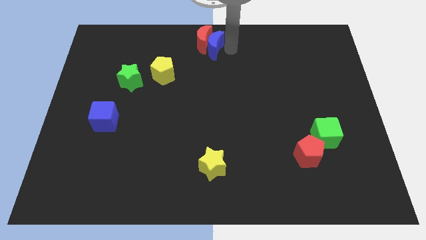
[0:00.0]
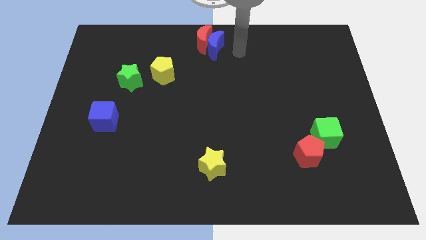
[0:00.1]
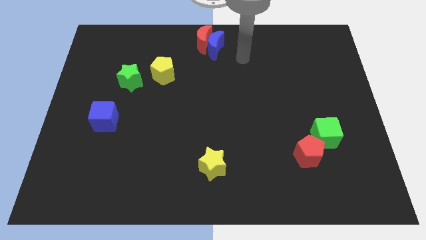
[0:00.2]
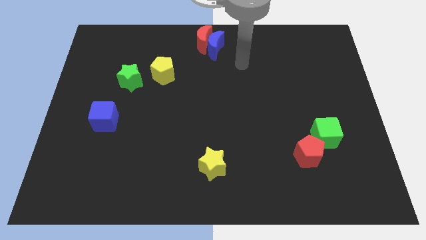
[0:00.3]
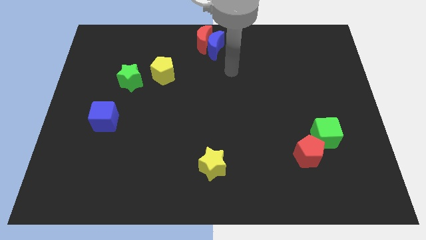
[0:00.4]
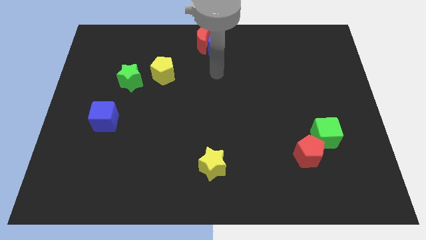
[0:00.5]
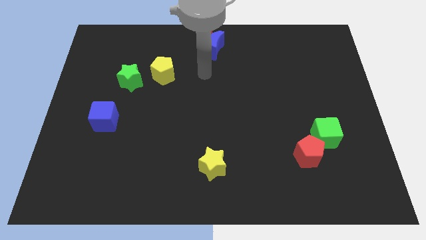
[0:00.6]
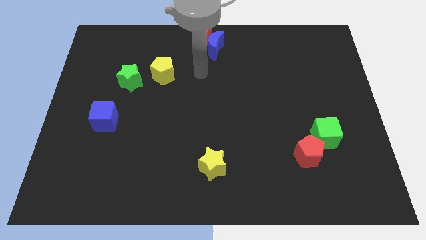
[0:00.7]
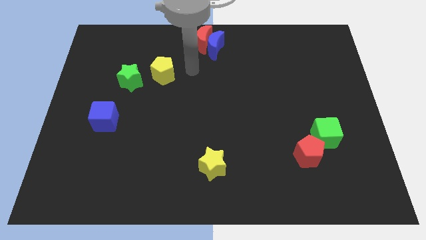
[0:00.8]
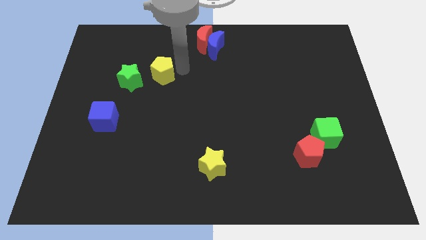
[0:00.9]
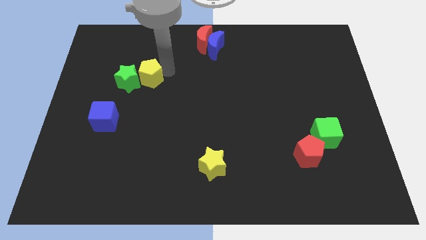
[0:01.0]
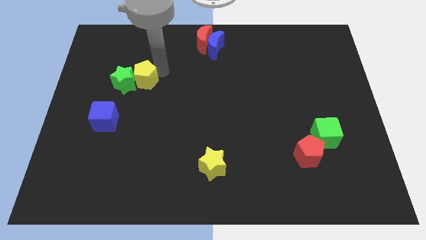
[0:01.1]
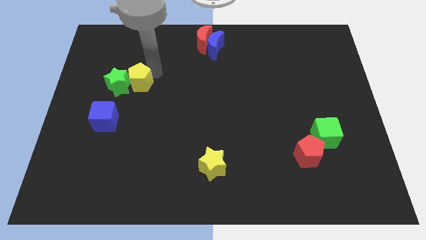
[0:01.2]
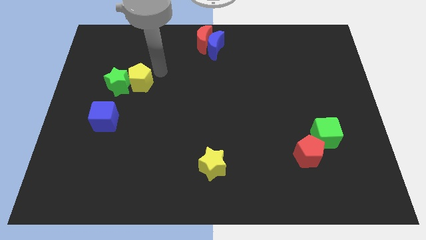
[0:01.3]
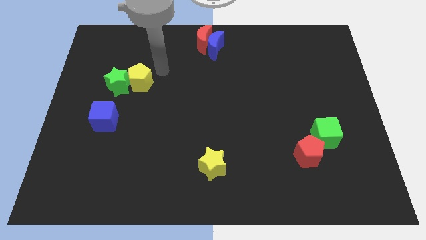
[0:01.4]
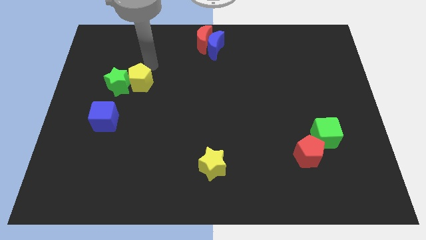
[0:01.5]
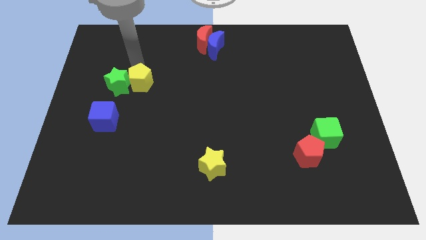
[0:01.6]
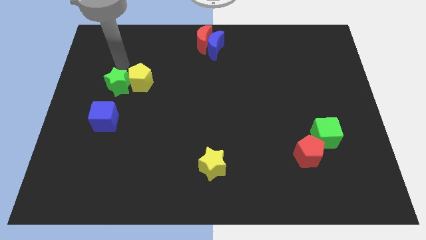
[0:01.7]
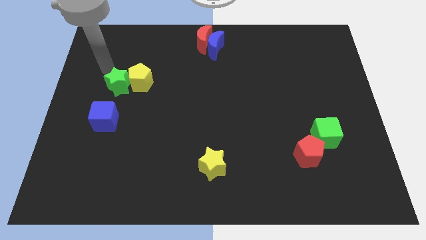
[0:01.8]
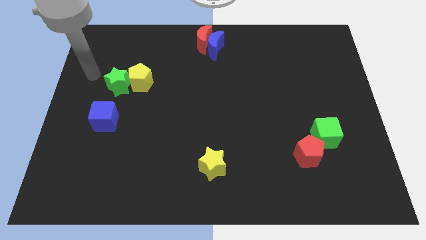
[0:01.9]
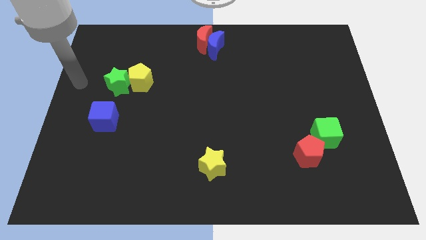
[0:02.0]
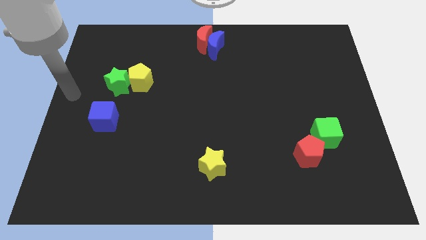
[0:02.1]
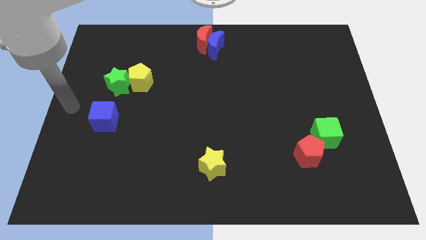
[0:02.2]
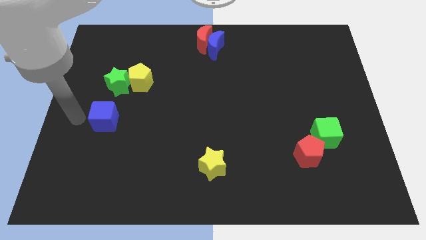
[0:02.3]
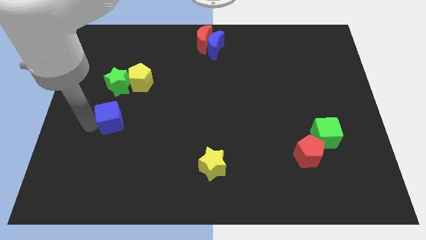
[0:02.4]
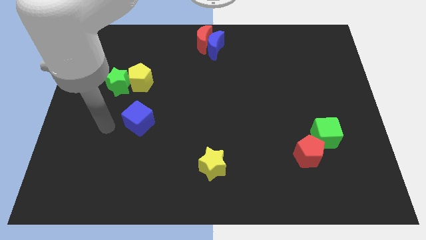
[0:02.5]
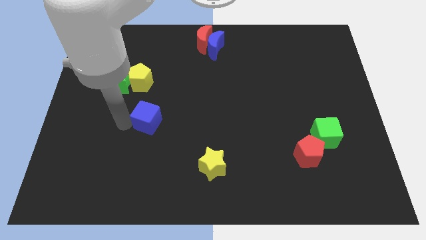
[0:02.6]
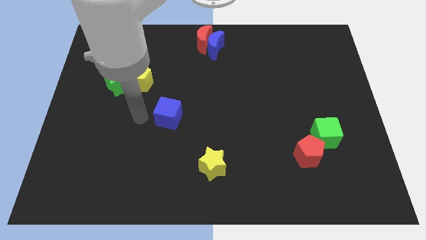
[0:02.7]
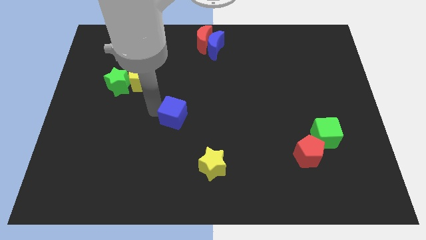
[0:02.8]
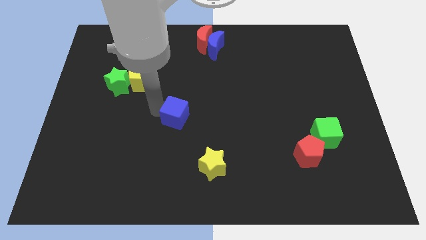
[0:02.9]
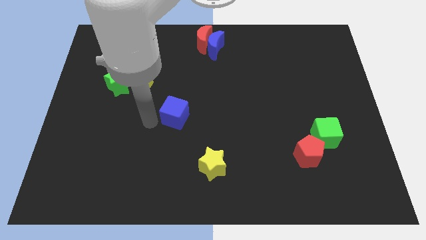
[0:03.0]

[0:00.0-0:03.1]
push the blue cube diagonally to the bottom right of the yellow pentagon

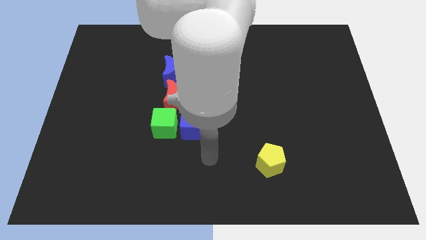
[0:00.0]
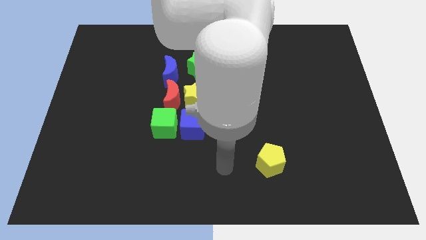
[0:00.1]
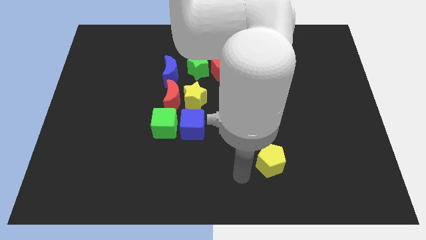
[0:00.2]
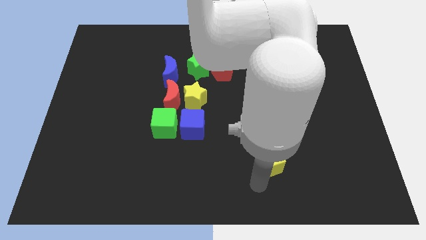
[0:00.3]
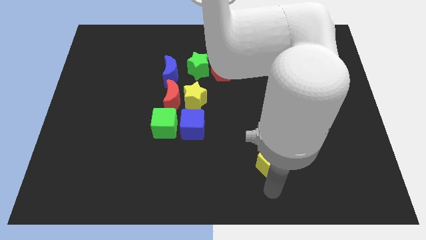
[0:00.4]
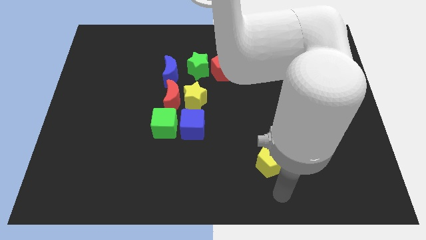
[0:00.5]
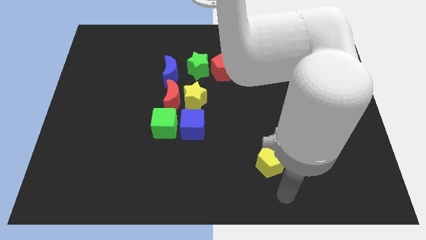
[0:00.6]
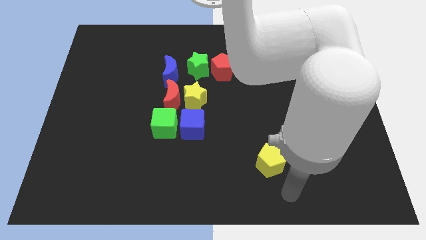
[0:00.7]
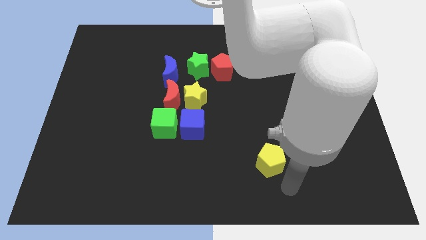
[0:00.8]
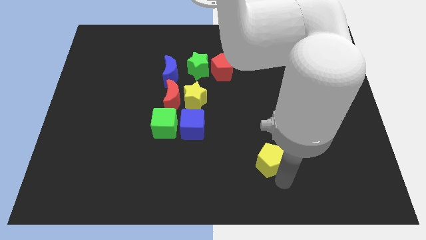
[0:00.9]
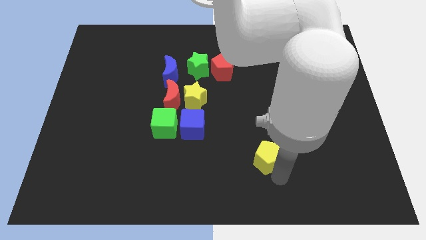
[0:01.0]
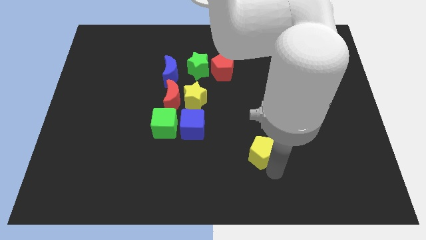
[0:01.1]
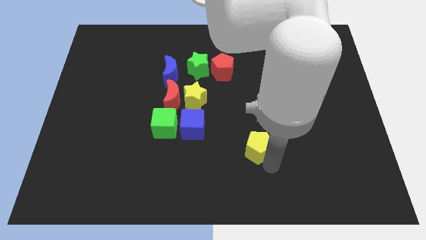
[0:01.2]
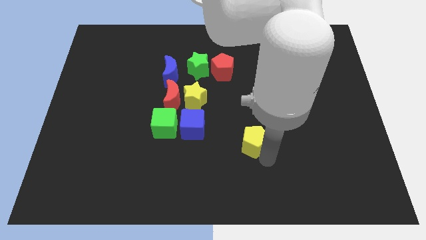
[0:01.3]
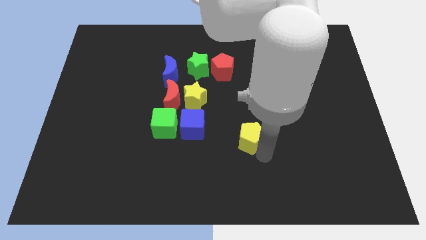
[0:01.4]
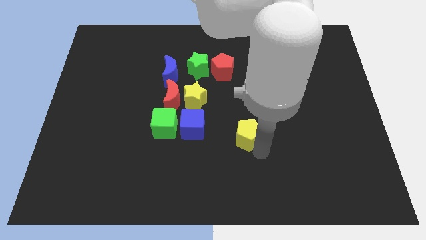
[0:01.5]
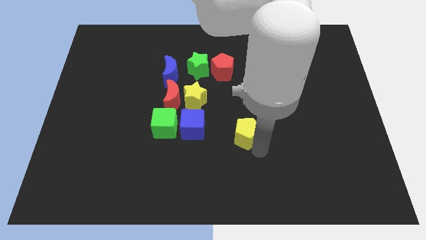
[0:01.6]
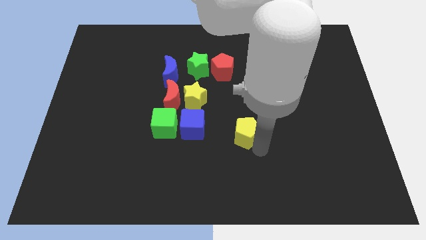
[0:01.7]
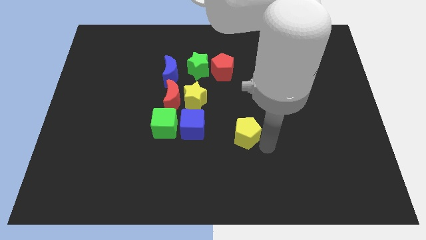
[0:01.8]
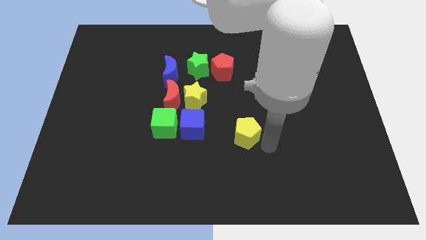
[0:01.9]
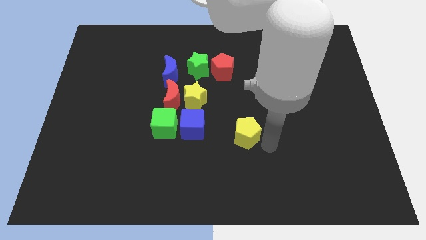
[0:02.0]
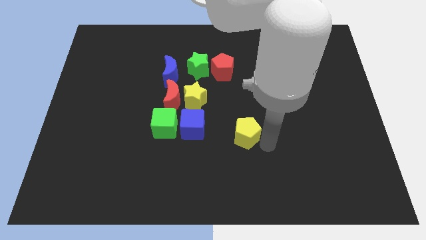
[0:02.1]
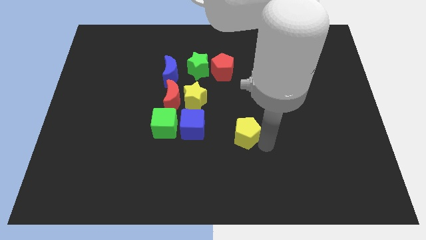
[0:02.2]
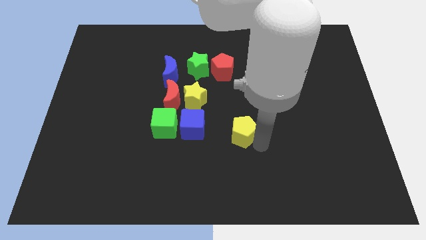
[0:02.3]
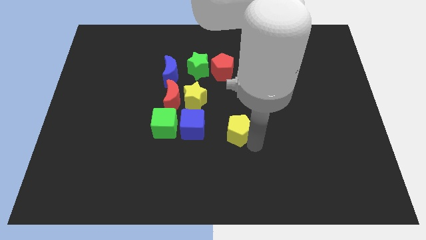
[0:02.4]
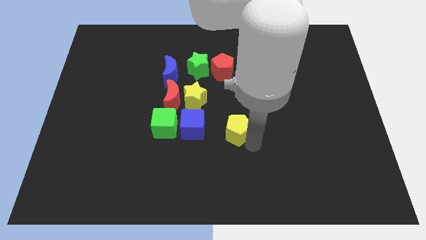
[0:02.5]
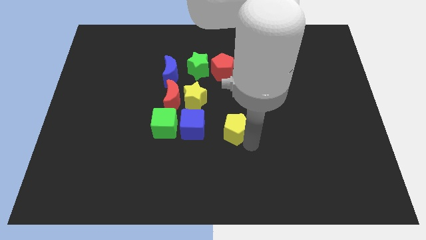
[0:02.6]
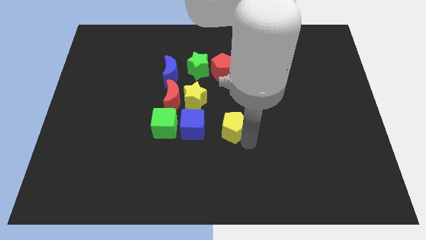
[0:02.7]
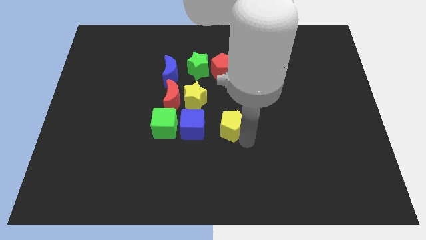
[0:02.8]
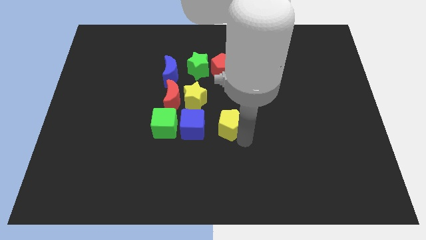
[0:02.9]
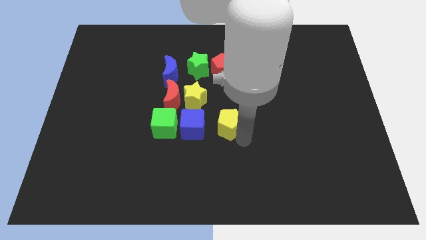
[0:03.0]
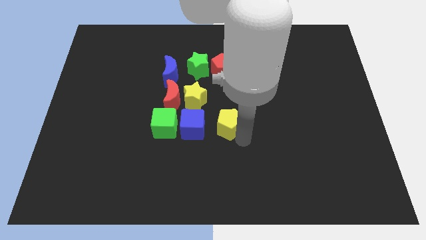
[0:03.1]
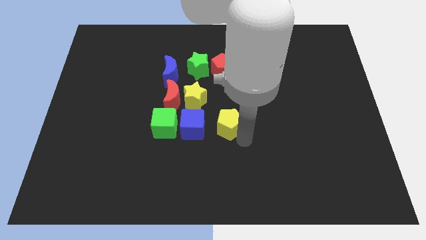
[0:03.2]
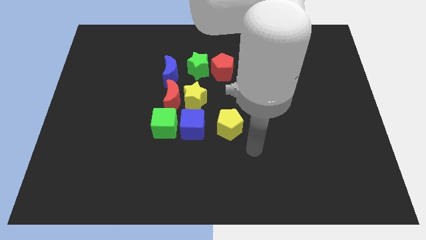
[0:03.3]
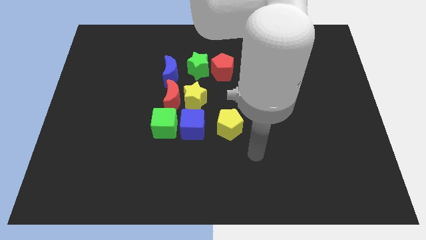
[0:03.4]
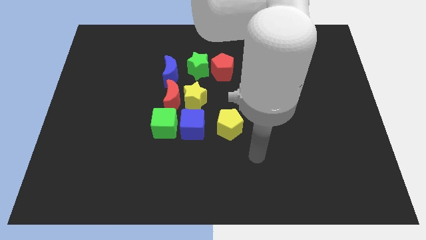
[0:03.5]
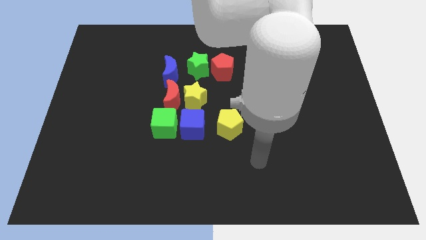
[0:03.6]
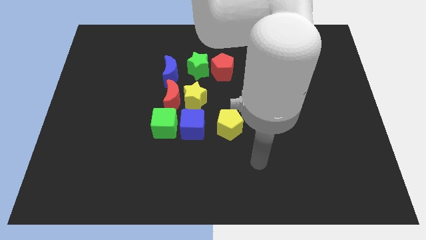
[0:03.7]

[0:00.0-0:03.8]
push the yellow pentagon to the right side of the blue cube

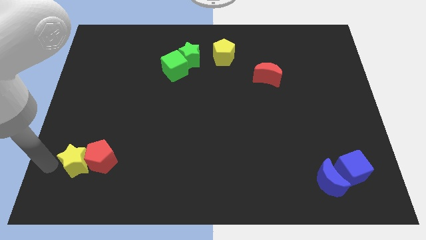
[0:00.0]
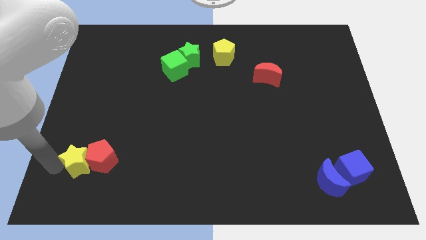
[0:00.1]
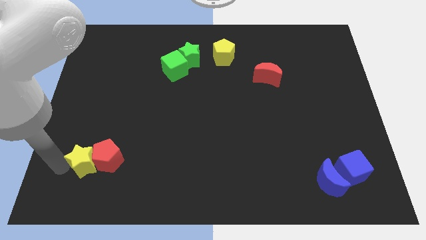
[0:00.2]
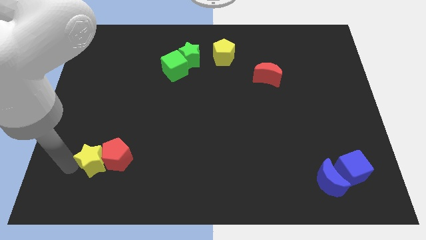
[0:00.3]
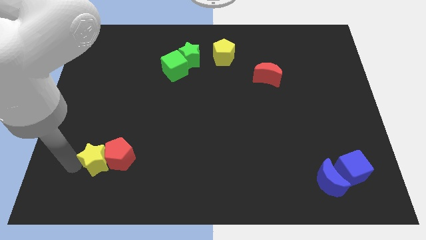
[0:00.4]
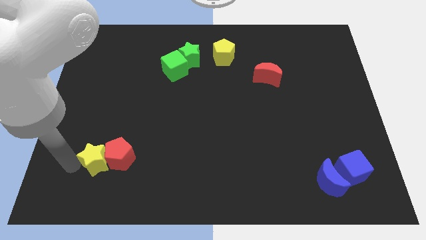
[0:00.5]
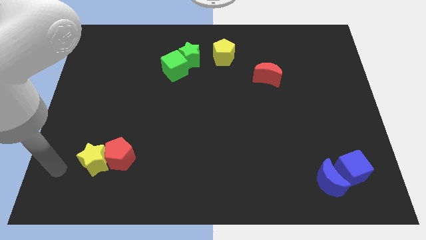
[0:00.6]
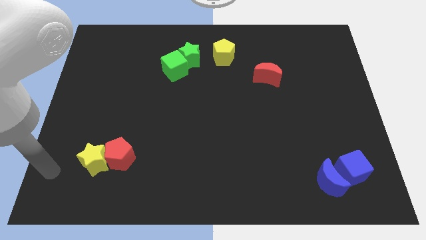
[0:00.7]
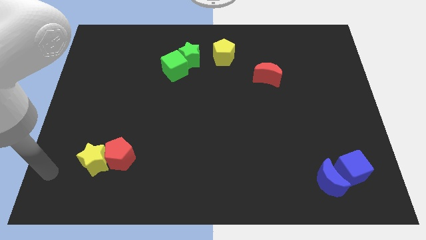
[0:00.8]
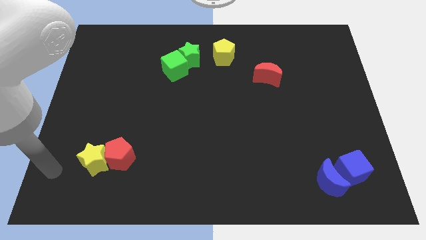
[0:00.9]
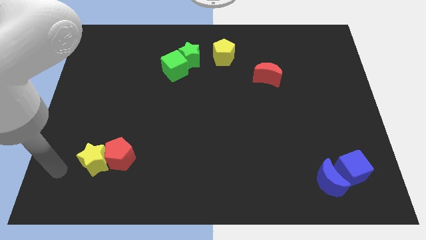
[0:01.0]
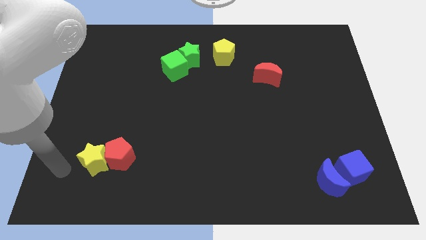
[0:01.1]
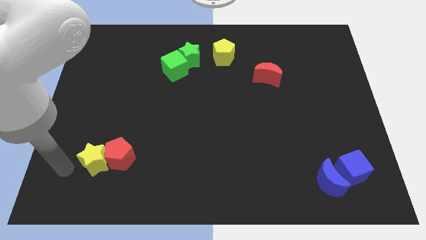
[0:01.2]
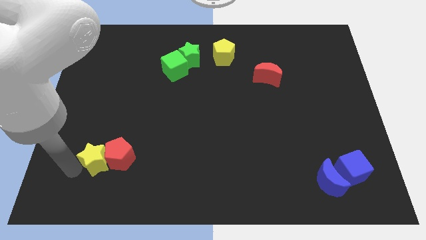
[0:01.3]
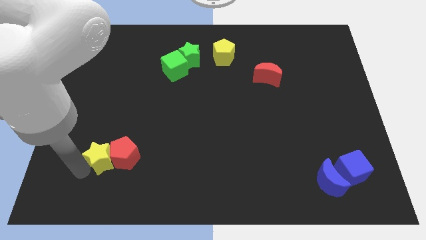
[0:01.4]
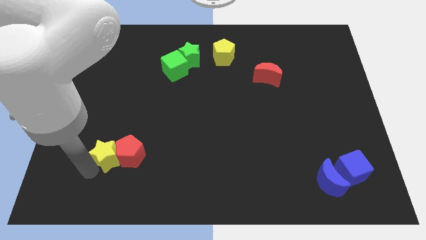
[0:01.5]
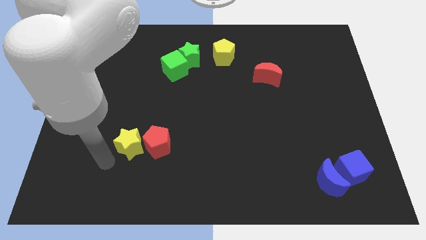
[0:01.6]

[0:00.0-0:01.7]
push teh yellow star and red pentagon towards right

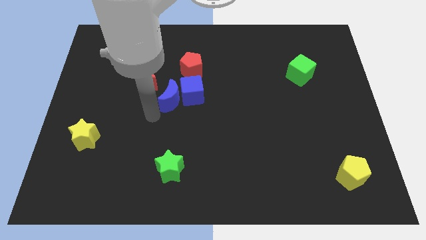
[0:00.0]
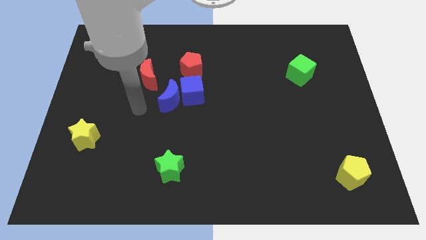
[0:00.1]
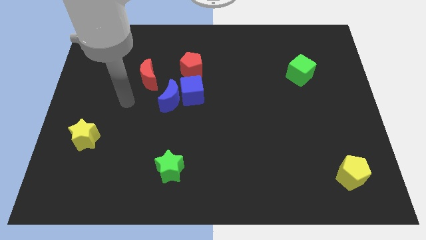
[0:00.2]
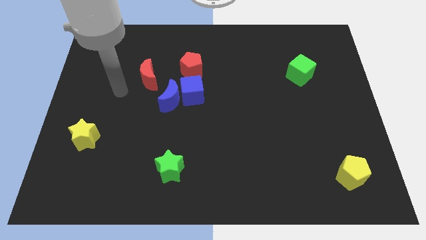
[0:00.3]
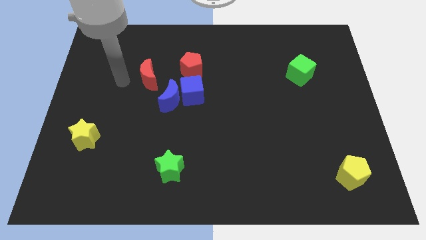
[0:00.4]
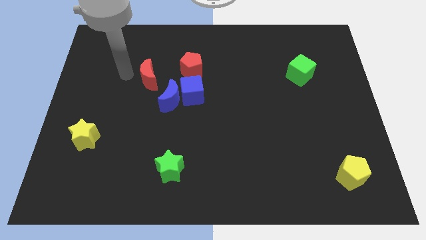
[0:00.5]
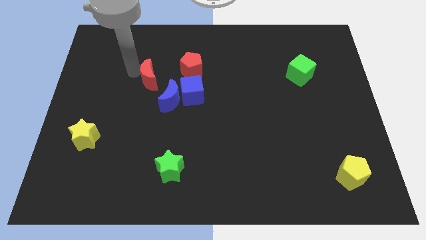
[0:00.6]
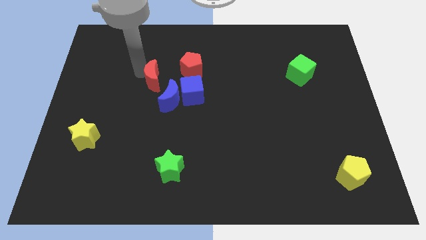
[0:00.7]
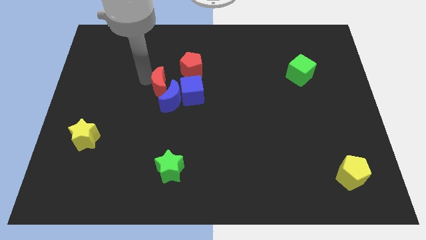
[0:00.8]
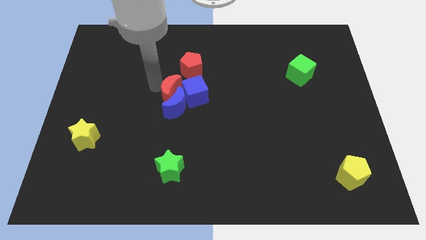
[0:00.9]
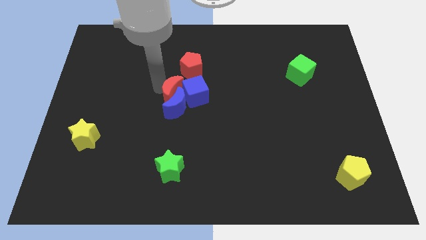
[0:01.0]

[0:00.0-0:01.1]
slide red moon into blue blocks
